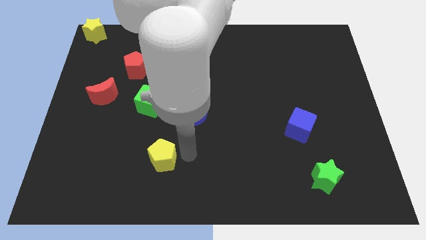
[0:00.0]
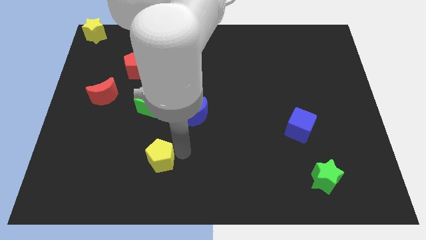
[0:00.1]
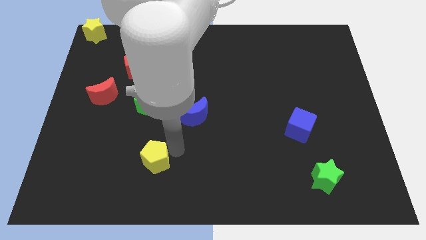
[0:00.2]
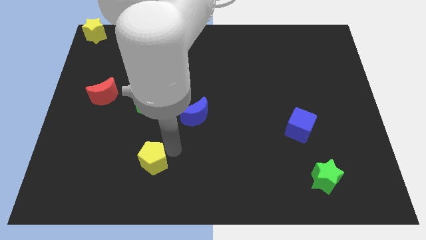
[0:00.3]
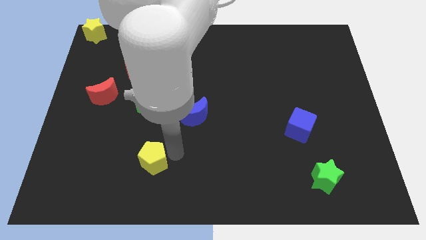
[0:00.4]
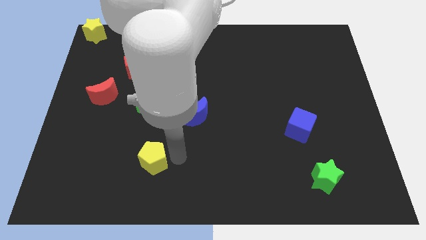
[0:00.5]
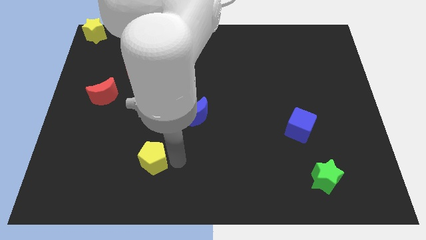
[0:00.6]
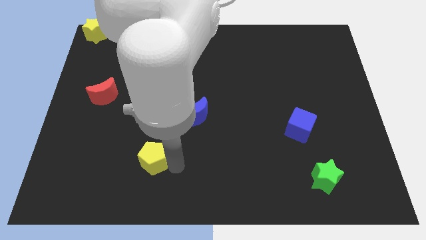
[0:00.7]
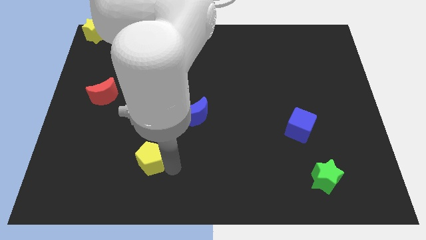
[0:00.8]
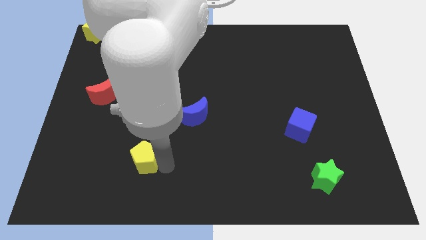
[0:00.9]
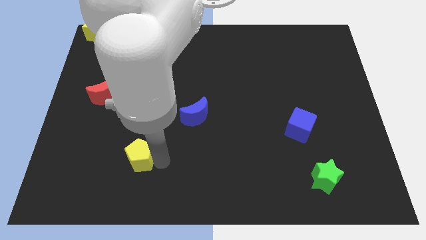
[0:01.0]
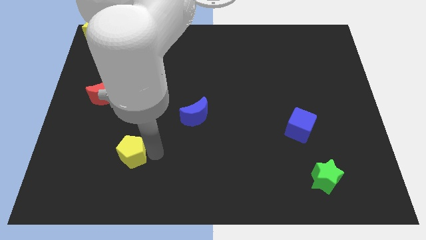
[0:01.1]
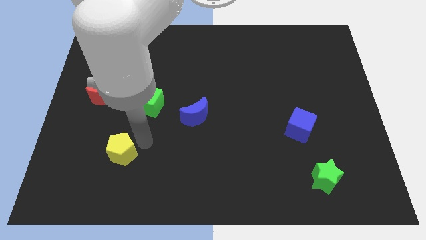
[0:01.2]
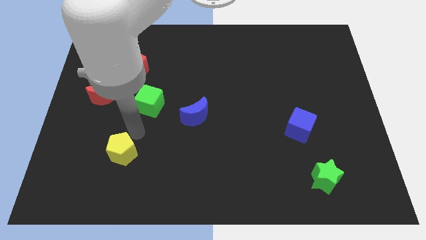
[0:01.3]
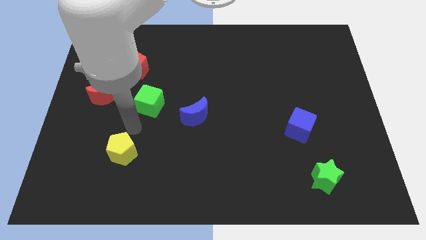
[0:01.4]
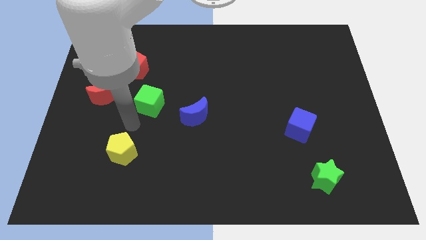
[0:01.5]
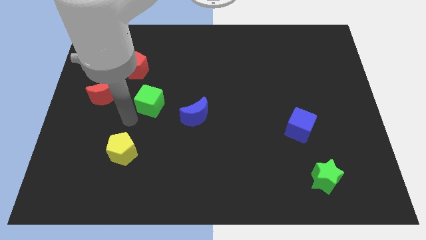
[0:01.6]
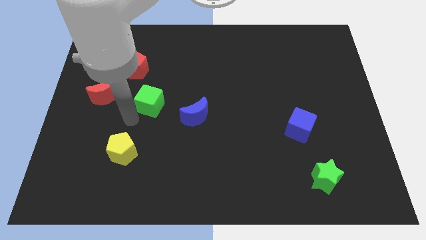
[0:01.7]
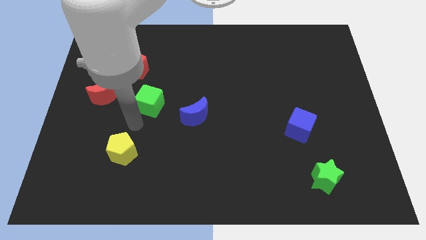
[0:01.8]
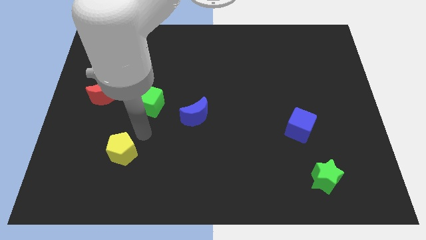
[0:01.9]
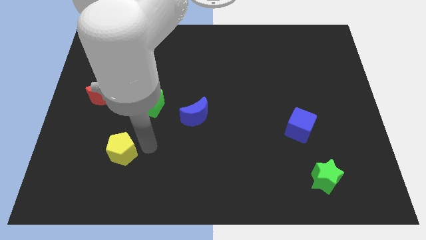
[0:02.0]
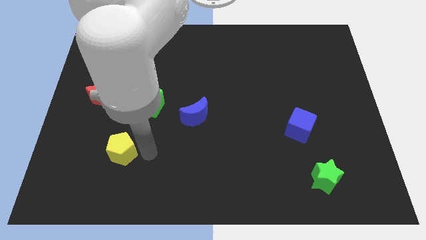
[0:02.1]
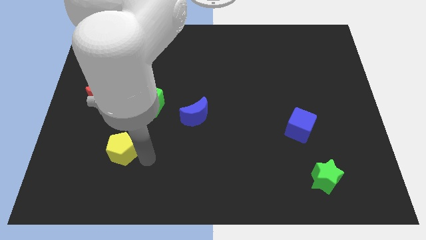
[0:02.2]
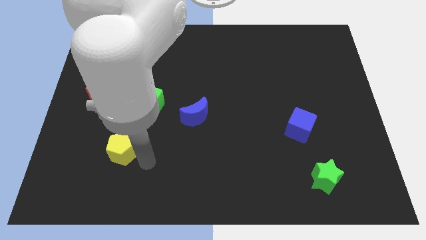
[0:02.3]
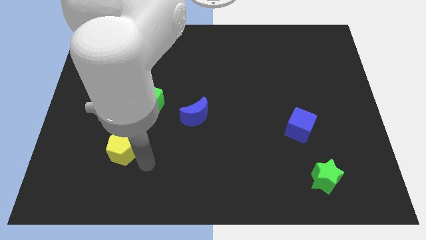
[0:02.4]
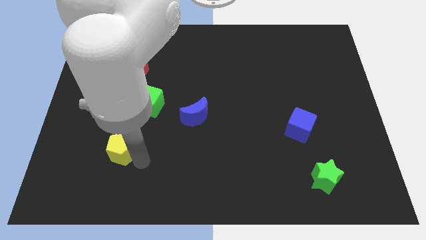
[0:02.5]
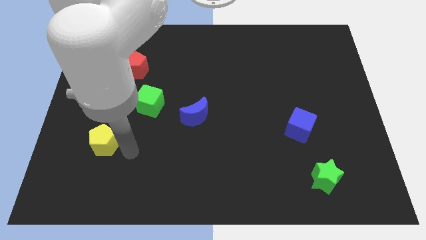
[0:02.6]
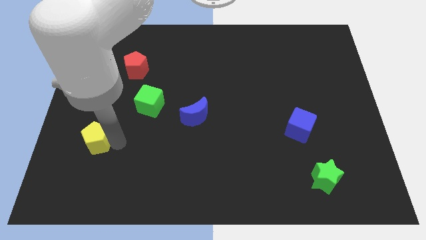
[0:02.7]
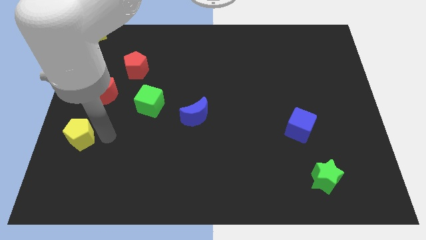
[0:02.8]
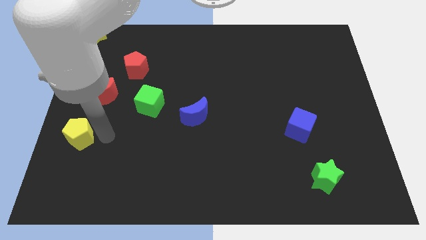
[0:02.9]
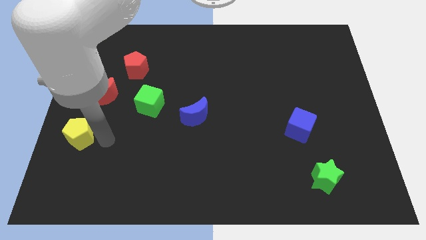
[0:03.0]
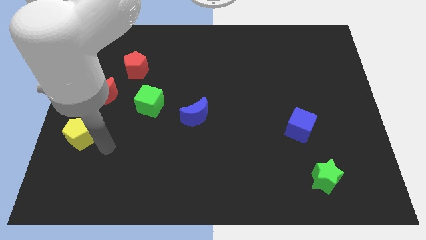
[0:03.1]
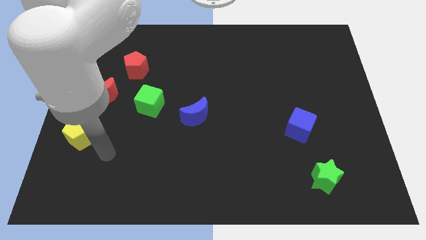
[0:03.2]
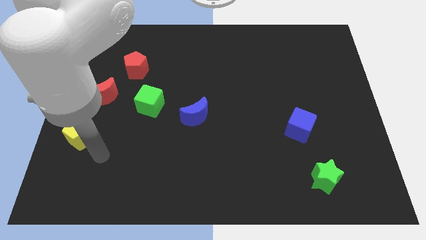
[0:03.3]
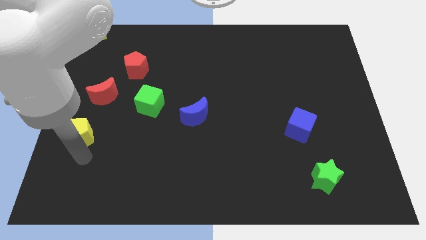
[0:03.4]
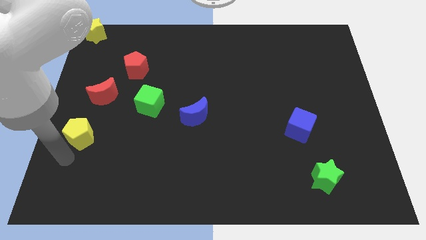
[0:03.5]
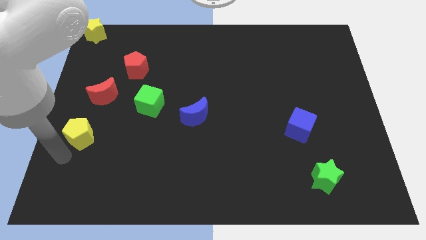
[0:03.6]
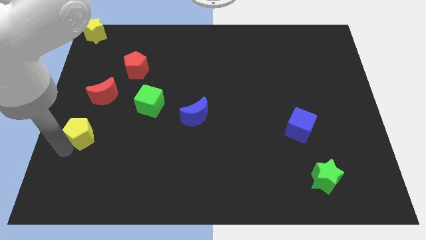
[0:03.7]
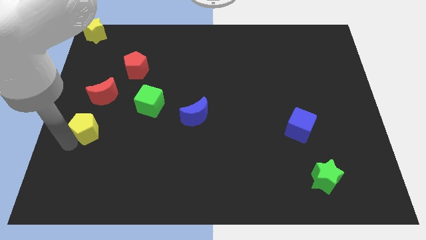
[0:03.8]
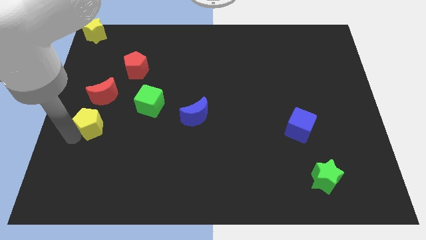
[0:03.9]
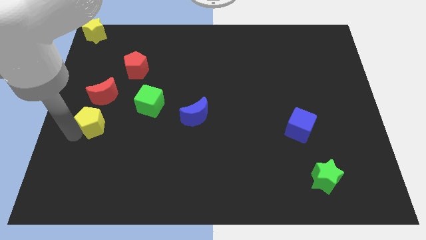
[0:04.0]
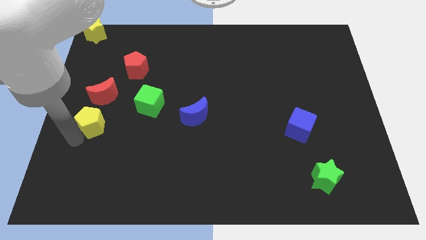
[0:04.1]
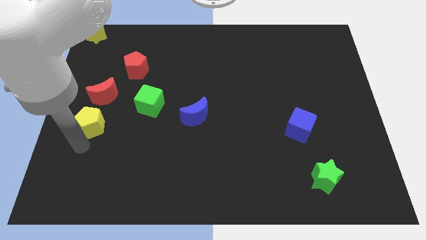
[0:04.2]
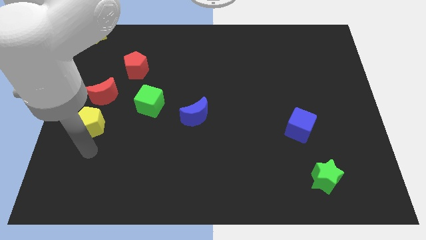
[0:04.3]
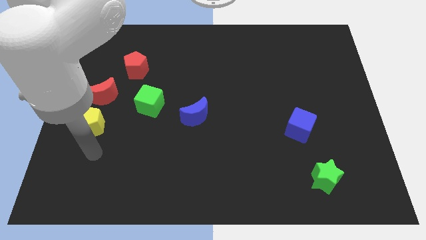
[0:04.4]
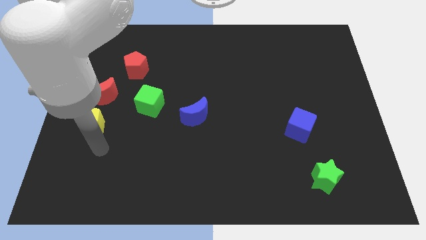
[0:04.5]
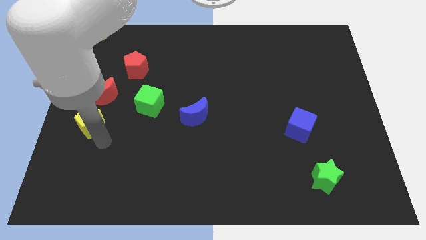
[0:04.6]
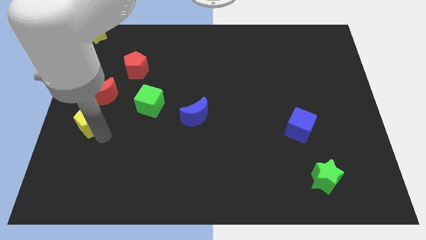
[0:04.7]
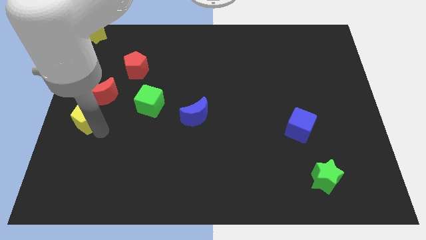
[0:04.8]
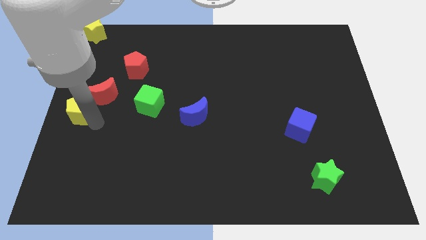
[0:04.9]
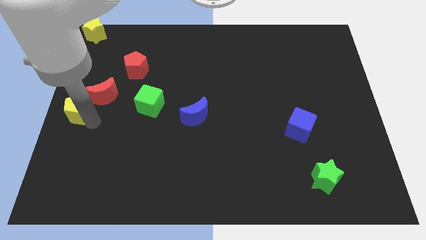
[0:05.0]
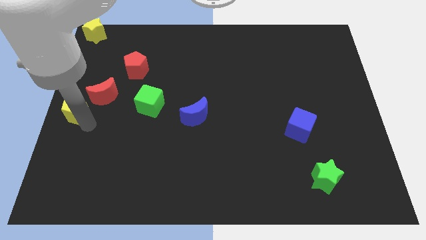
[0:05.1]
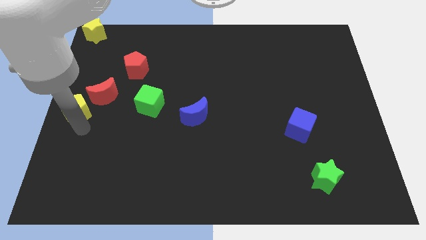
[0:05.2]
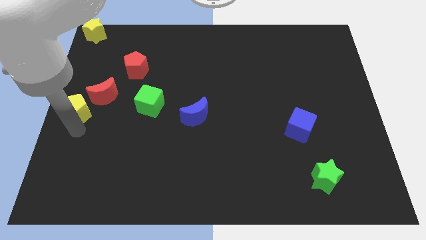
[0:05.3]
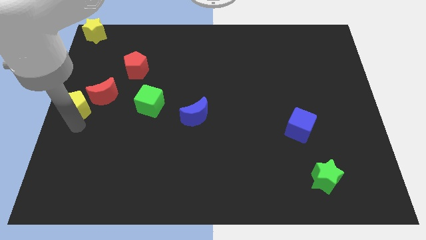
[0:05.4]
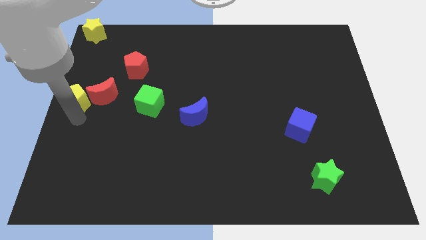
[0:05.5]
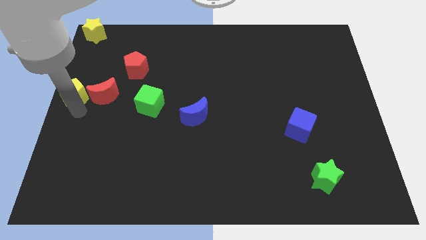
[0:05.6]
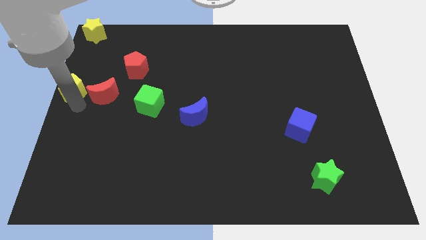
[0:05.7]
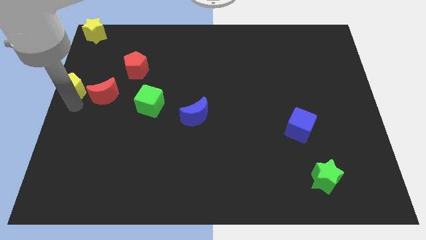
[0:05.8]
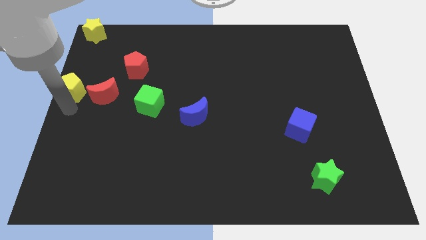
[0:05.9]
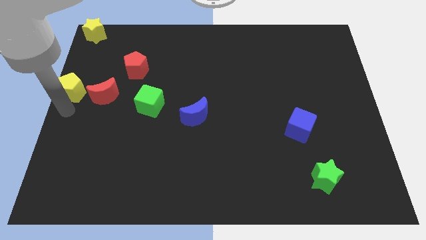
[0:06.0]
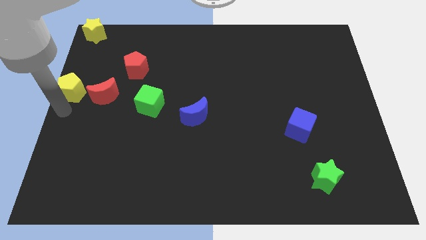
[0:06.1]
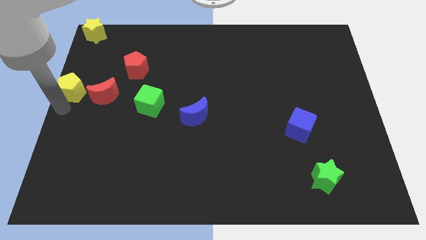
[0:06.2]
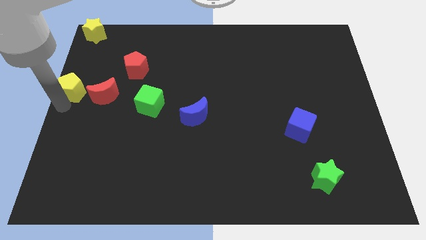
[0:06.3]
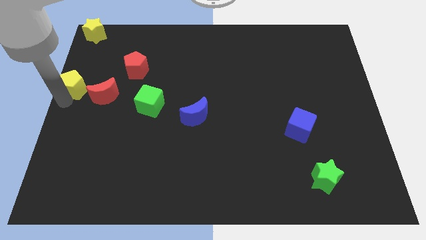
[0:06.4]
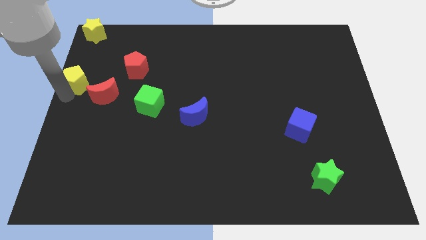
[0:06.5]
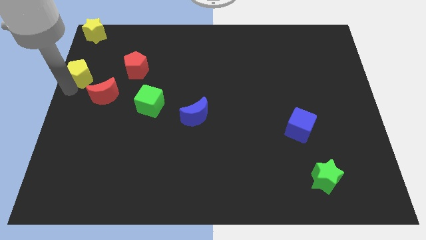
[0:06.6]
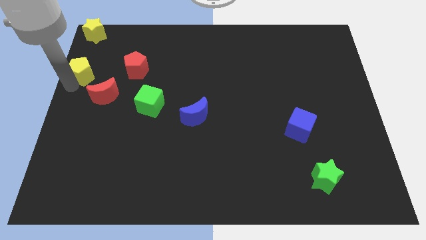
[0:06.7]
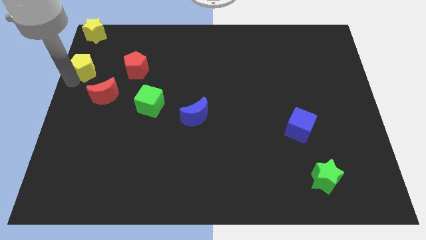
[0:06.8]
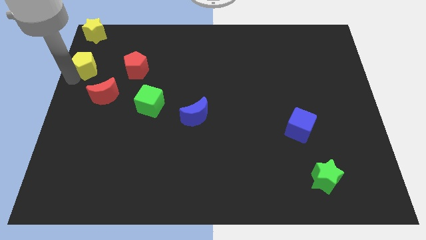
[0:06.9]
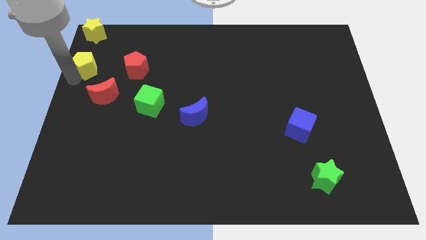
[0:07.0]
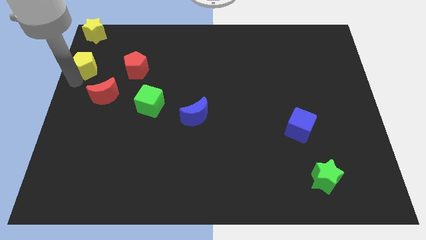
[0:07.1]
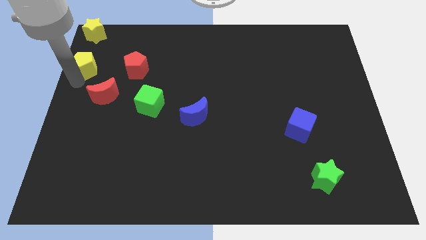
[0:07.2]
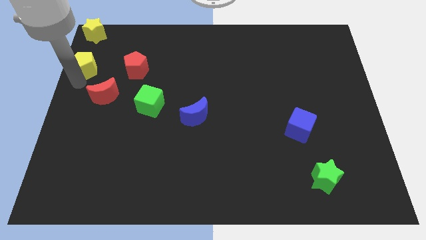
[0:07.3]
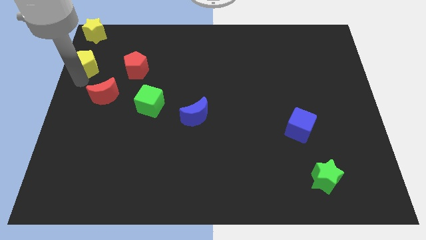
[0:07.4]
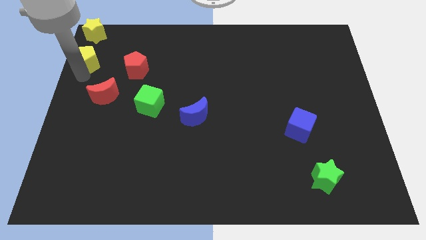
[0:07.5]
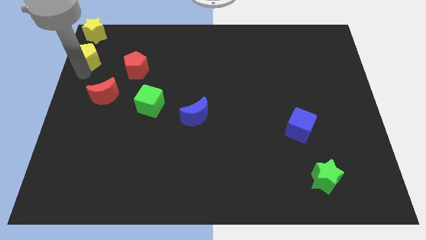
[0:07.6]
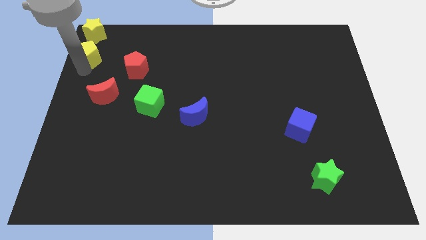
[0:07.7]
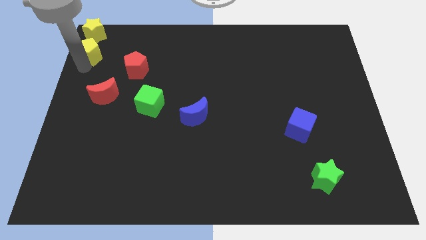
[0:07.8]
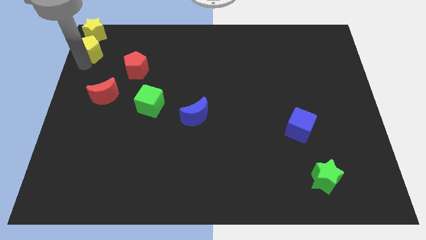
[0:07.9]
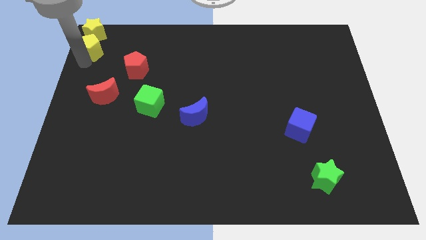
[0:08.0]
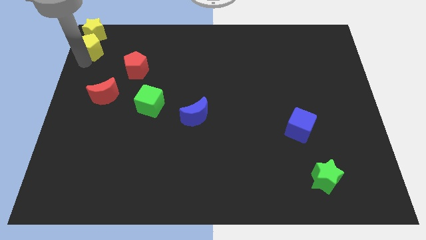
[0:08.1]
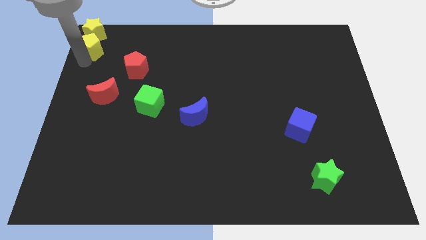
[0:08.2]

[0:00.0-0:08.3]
move the yellow pentagon to the left top corner

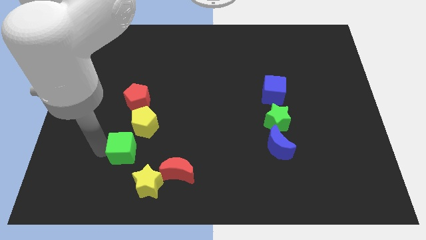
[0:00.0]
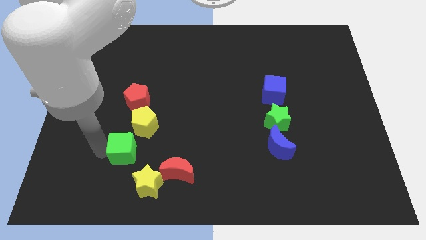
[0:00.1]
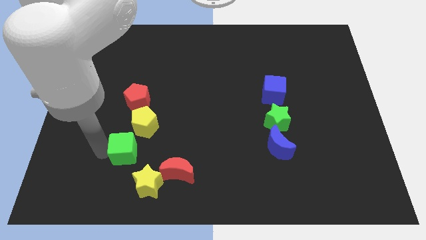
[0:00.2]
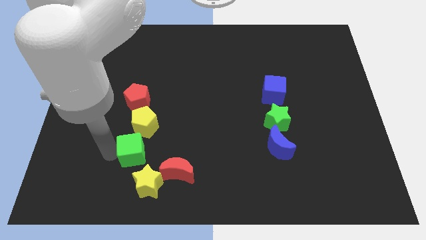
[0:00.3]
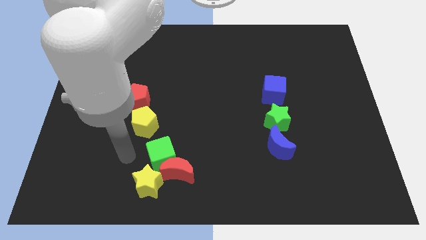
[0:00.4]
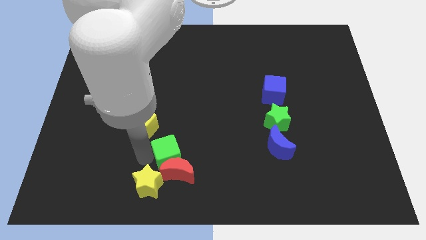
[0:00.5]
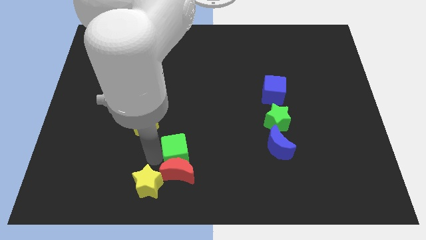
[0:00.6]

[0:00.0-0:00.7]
move the green cube above the red crescent

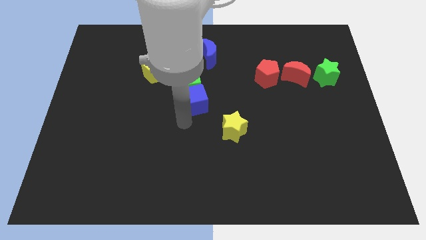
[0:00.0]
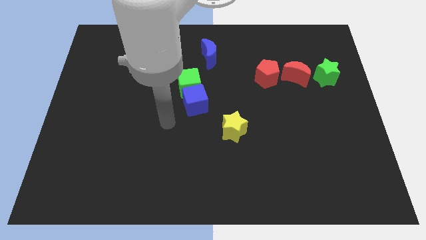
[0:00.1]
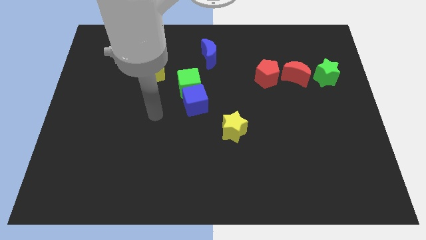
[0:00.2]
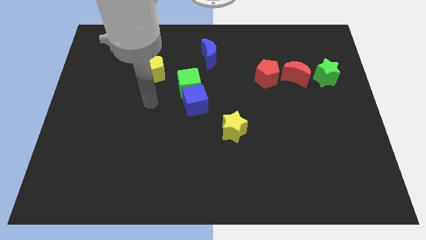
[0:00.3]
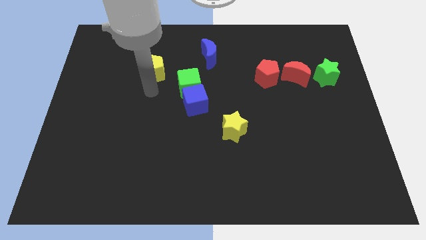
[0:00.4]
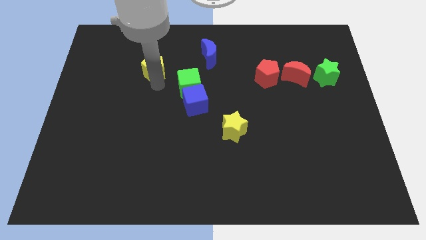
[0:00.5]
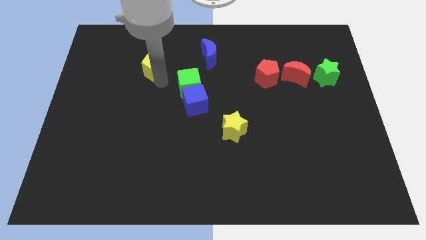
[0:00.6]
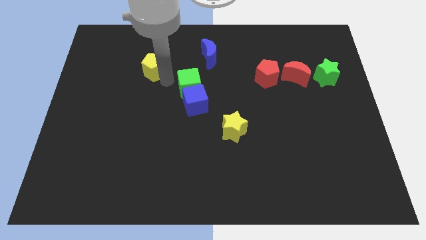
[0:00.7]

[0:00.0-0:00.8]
place your arm at the bottom of yellow pentagon
